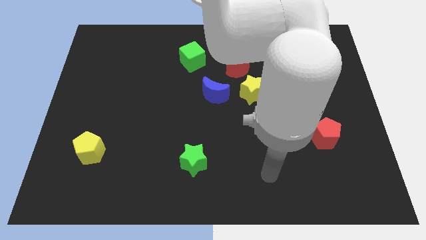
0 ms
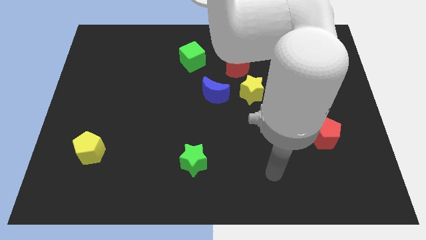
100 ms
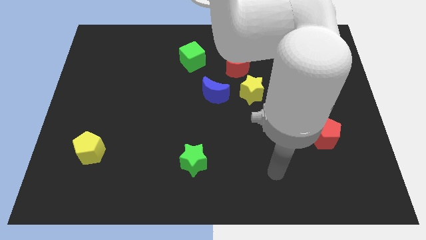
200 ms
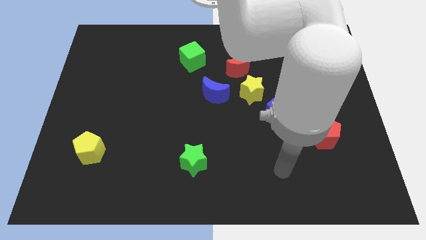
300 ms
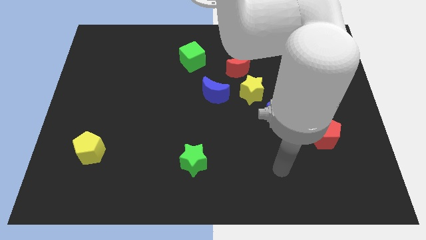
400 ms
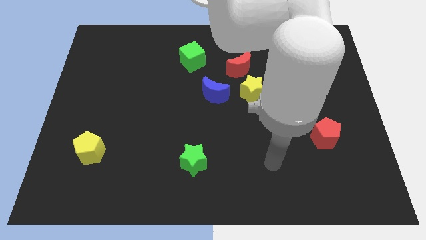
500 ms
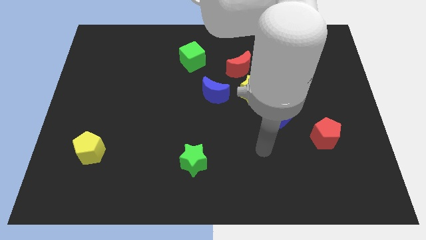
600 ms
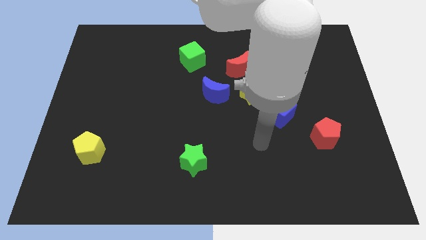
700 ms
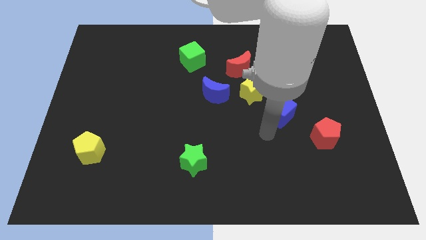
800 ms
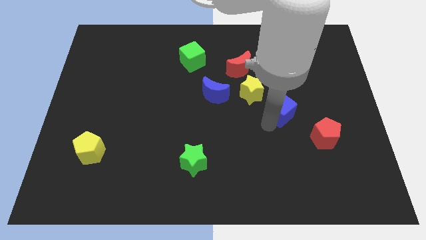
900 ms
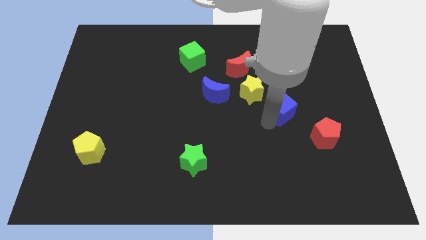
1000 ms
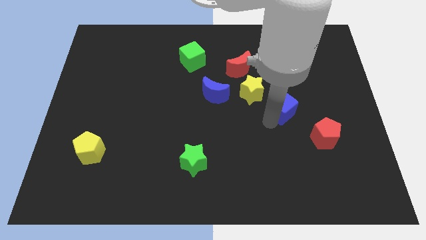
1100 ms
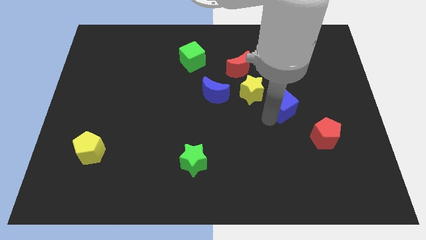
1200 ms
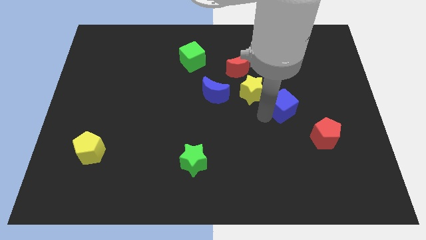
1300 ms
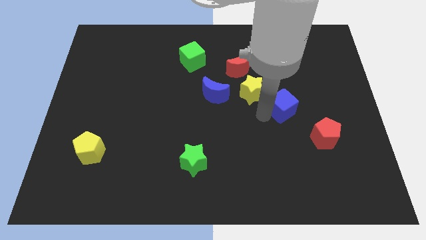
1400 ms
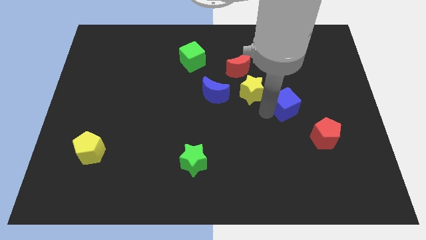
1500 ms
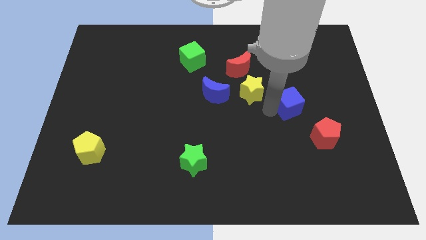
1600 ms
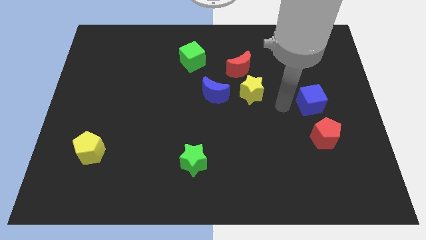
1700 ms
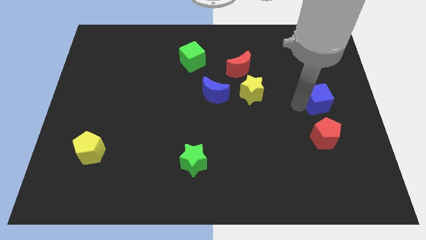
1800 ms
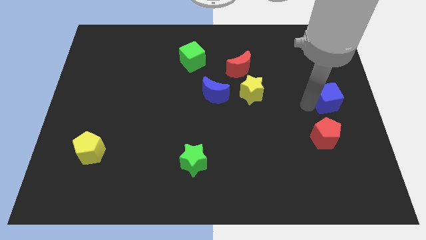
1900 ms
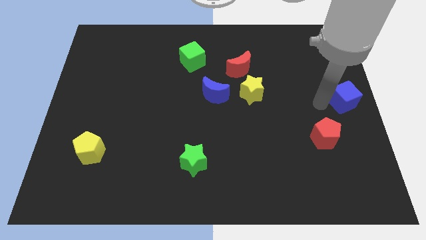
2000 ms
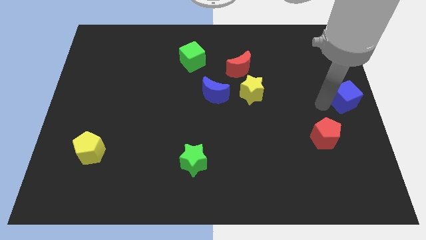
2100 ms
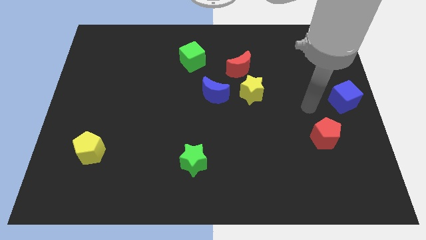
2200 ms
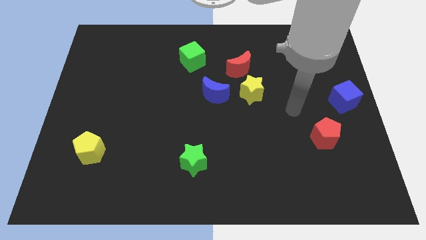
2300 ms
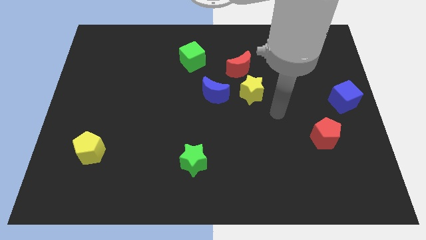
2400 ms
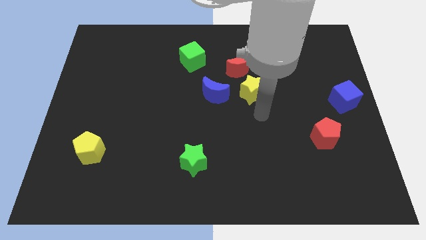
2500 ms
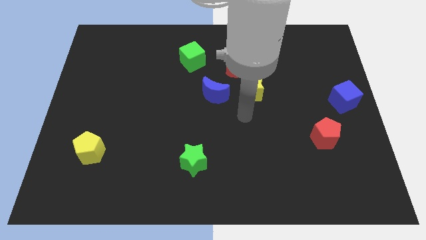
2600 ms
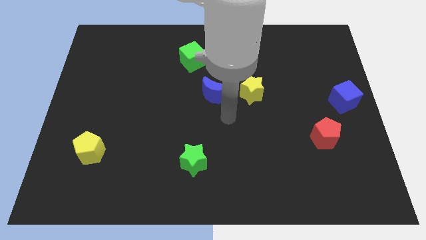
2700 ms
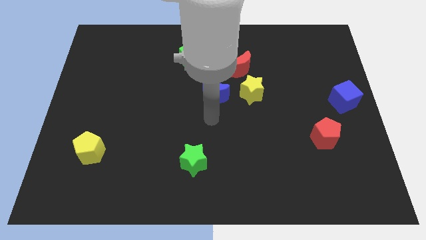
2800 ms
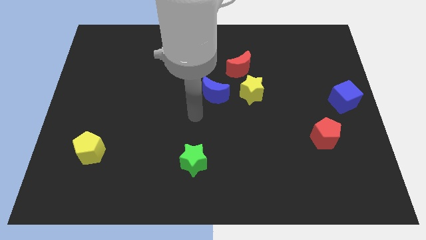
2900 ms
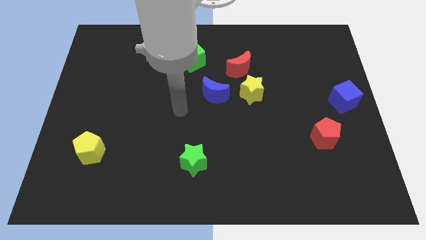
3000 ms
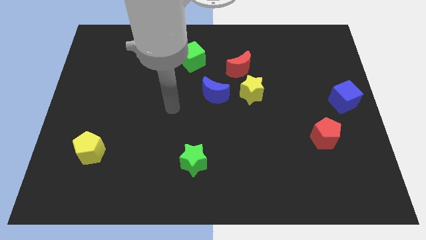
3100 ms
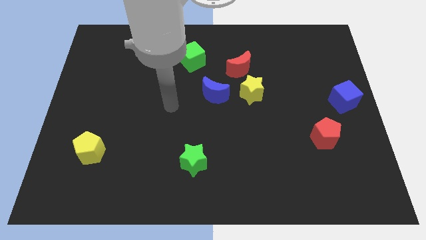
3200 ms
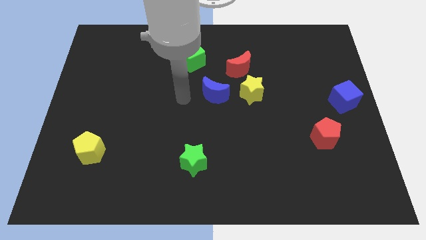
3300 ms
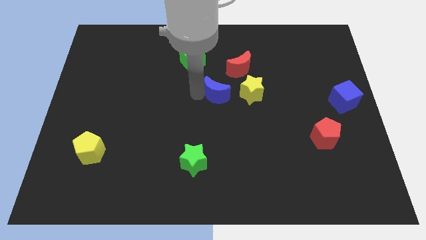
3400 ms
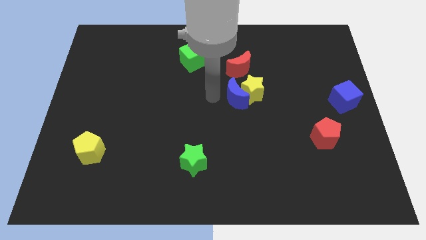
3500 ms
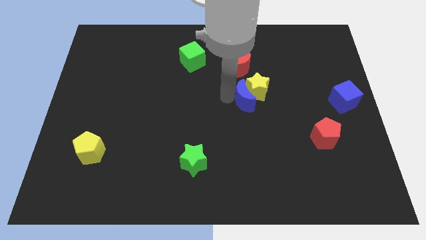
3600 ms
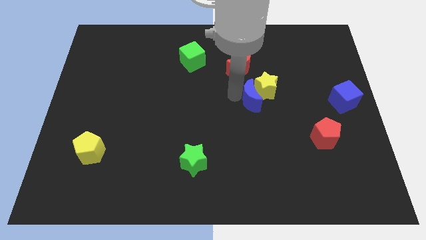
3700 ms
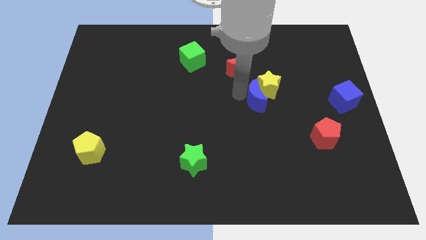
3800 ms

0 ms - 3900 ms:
push the blue cube to the center right

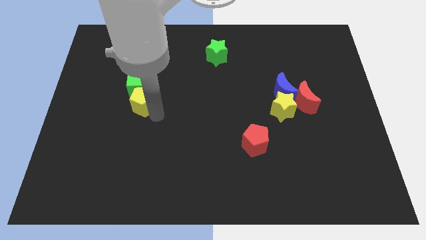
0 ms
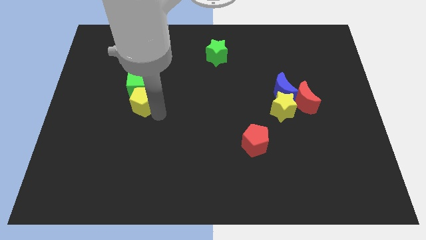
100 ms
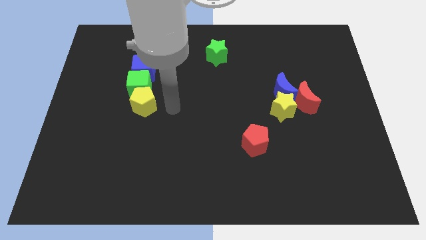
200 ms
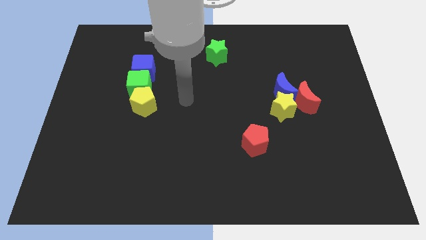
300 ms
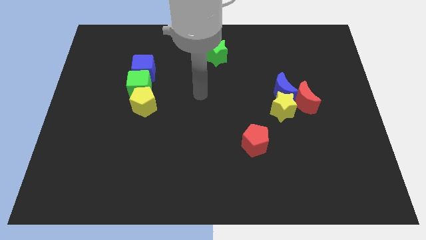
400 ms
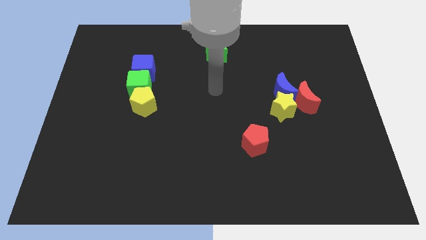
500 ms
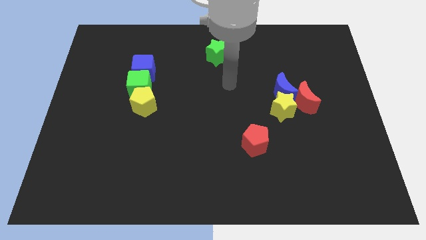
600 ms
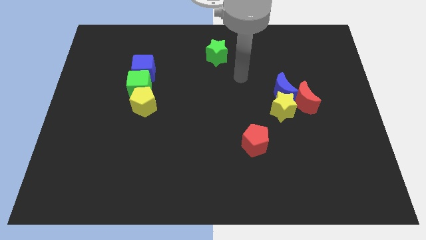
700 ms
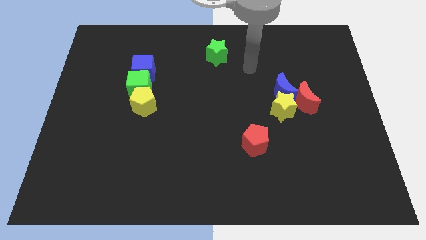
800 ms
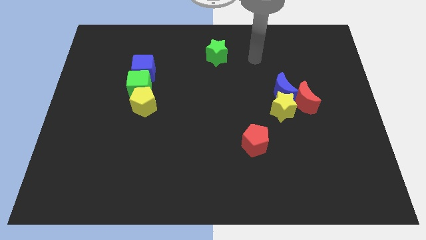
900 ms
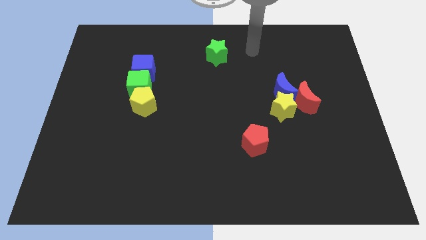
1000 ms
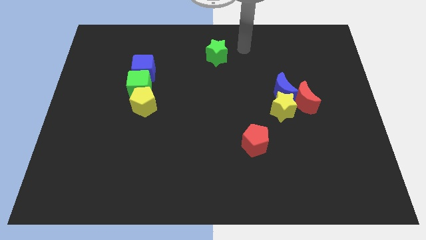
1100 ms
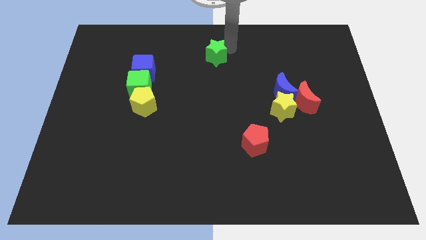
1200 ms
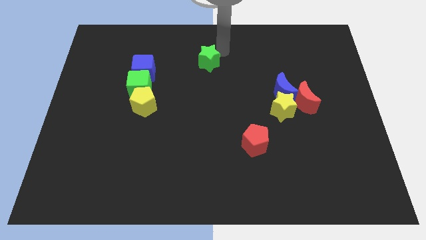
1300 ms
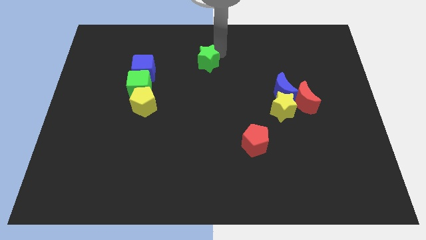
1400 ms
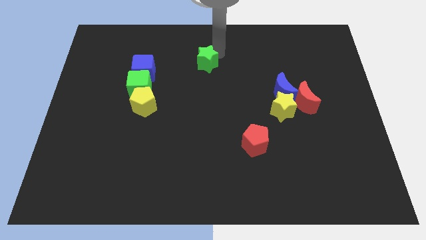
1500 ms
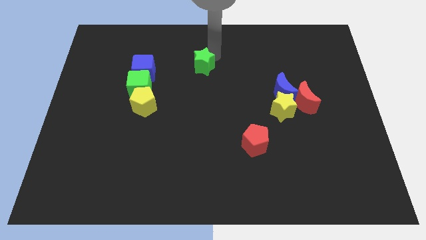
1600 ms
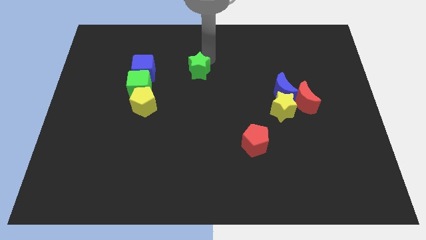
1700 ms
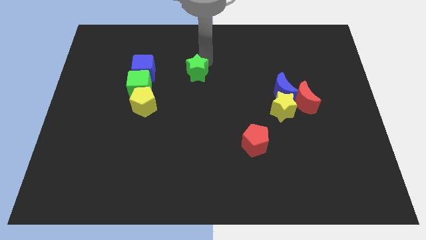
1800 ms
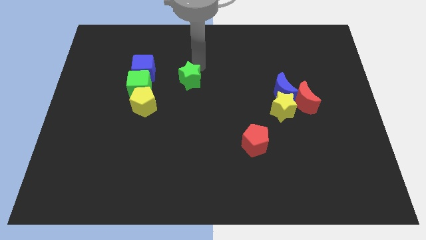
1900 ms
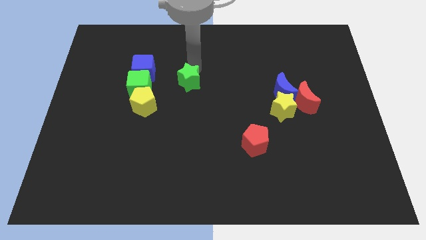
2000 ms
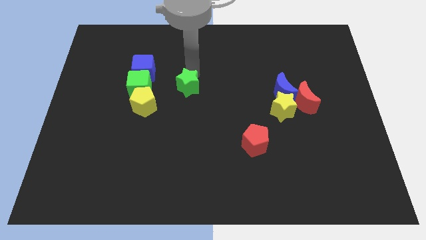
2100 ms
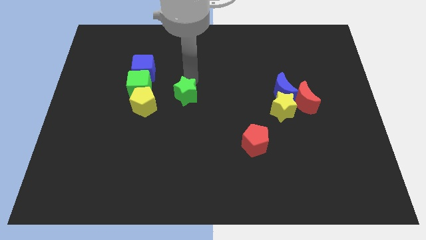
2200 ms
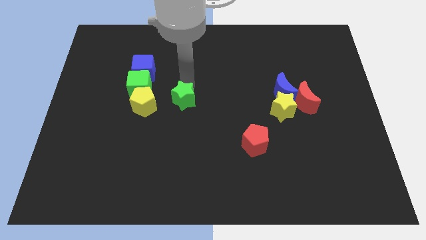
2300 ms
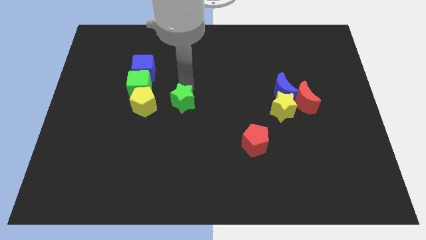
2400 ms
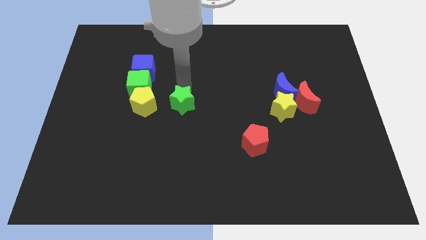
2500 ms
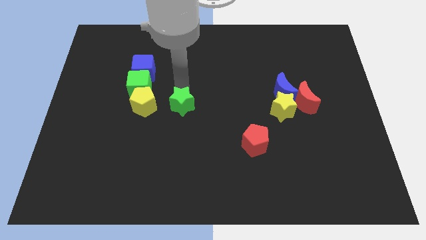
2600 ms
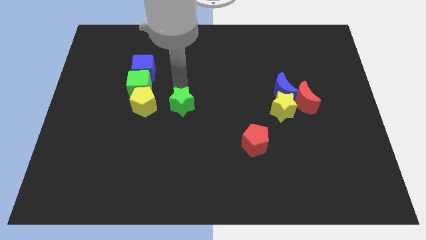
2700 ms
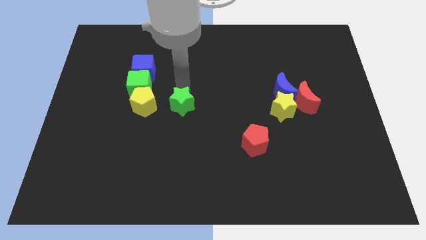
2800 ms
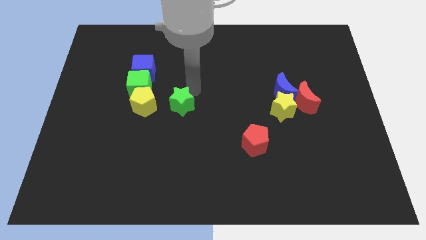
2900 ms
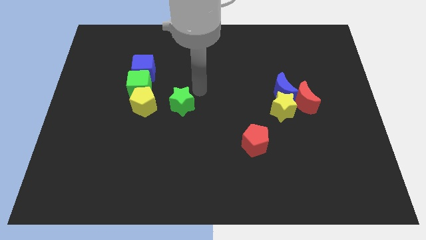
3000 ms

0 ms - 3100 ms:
push the green star horizontally at the right side of the yellow pentagon

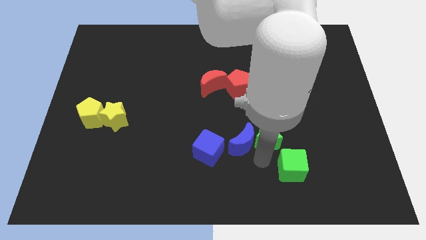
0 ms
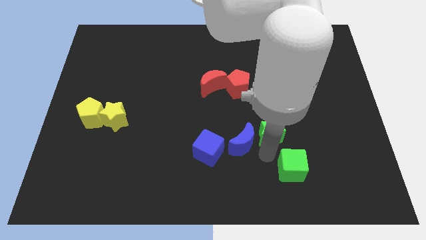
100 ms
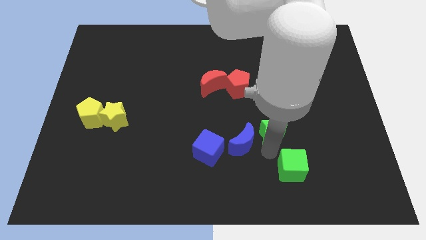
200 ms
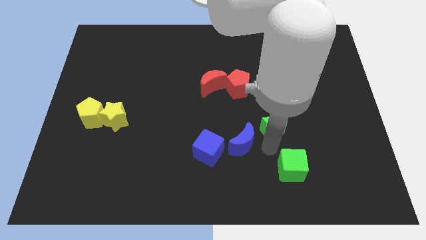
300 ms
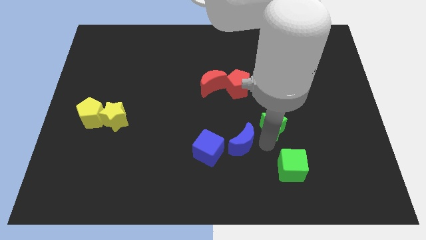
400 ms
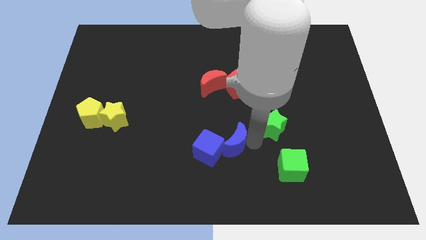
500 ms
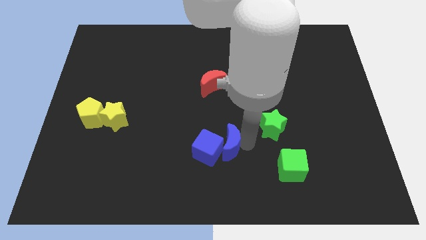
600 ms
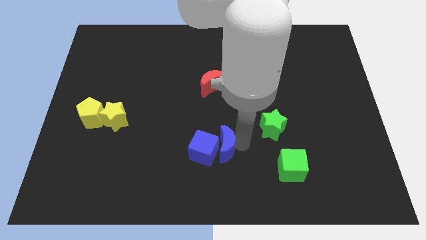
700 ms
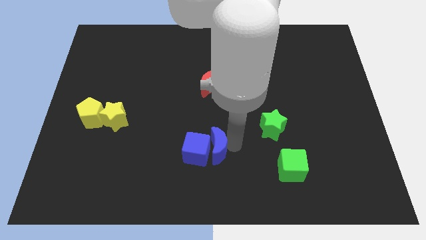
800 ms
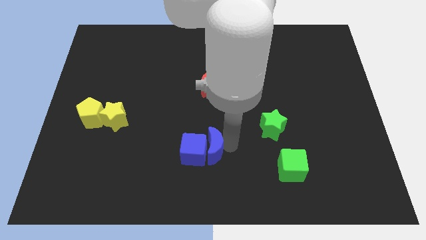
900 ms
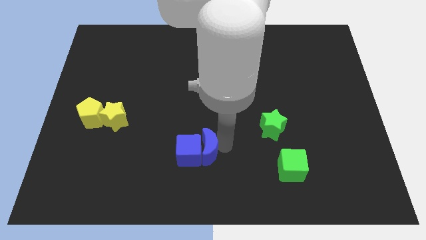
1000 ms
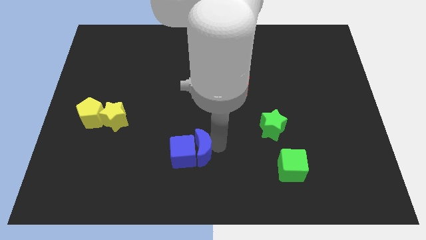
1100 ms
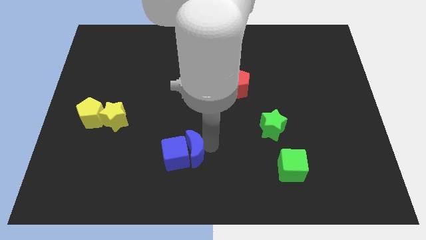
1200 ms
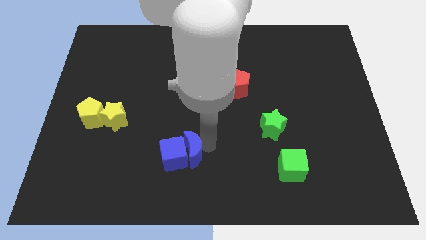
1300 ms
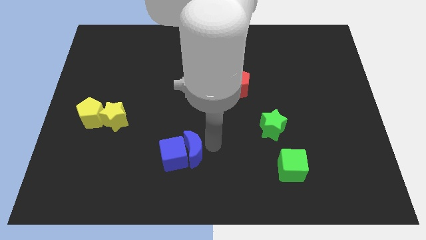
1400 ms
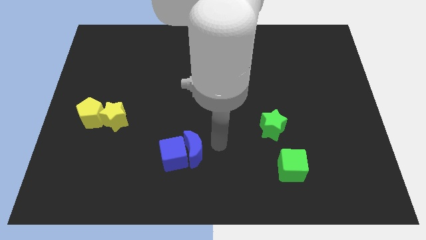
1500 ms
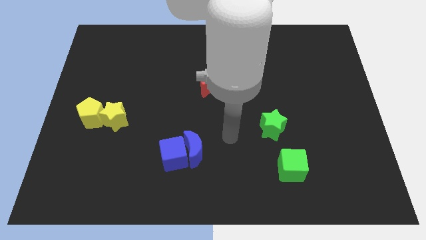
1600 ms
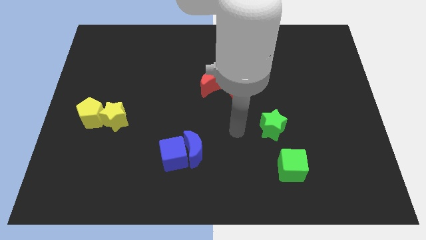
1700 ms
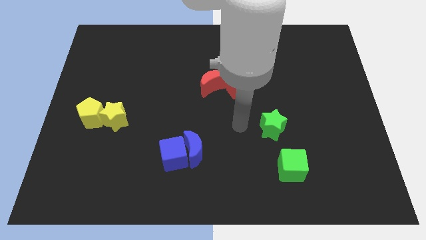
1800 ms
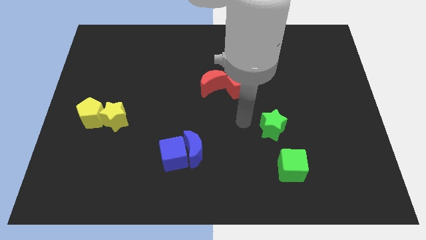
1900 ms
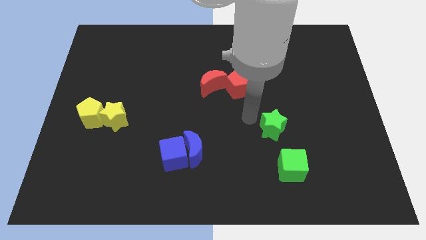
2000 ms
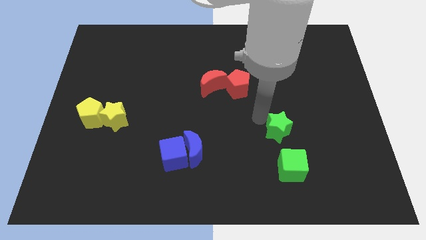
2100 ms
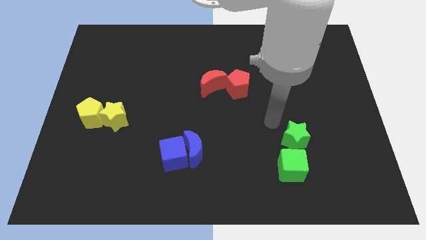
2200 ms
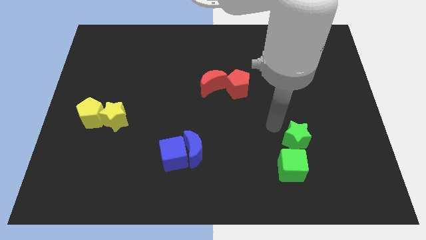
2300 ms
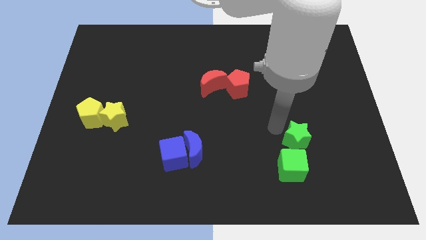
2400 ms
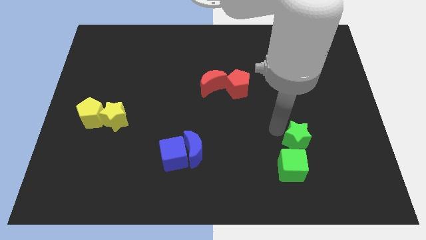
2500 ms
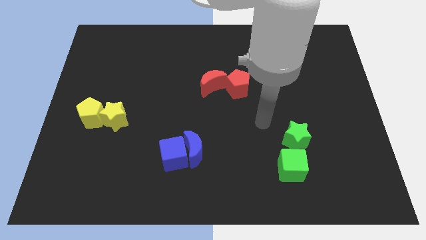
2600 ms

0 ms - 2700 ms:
move the green star towards the right side center of the board close to green cube
